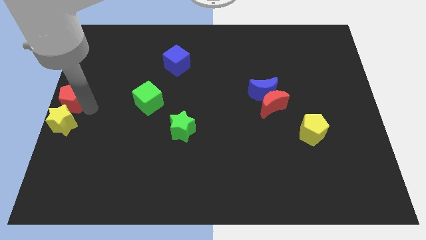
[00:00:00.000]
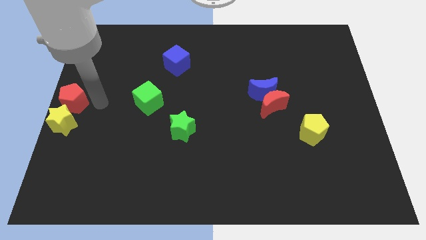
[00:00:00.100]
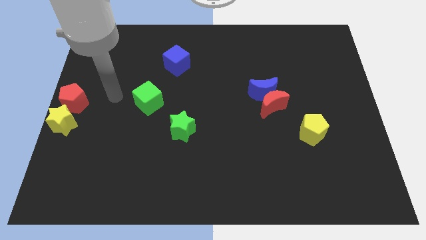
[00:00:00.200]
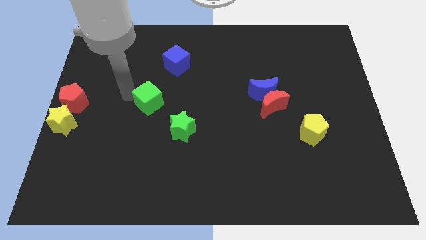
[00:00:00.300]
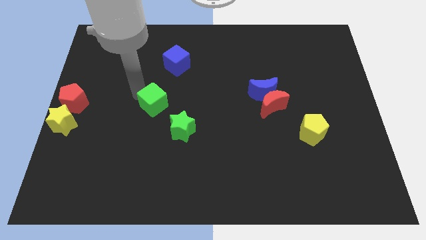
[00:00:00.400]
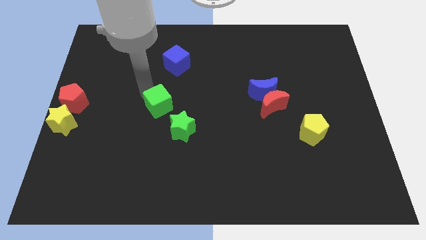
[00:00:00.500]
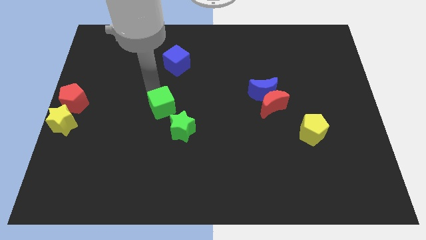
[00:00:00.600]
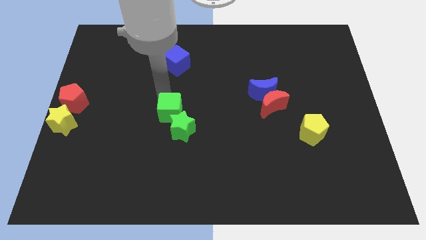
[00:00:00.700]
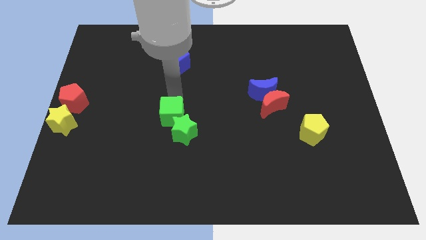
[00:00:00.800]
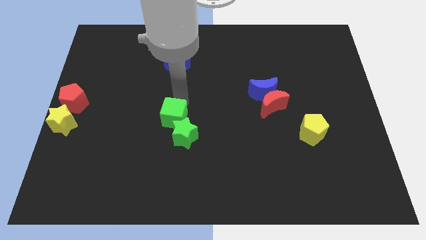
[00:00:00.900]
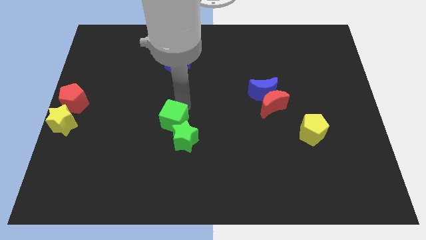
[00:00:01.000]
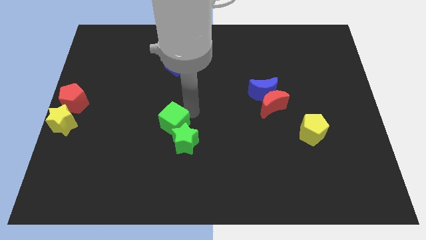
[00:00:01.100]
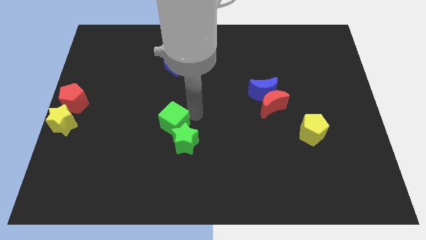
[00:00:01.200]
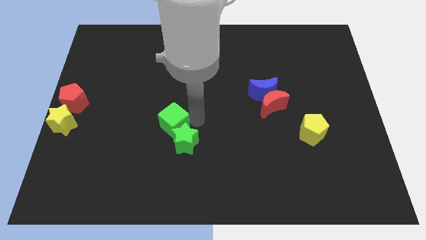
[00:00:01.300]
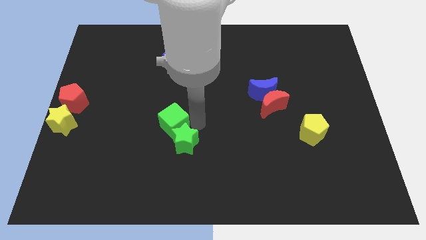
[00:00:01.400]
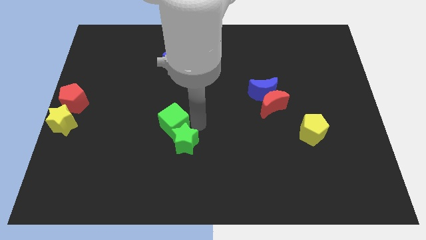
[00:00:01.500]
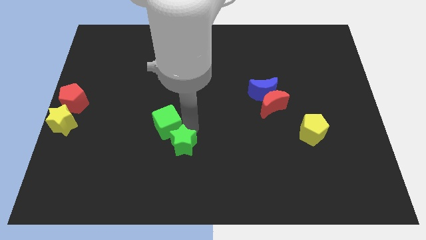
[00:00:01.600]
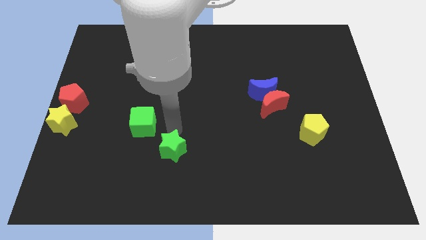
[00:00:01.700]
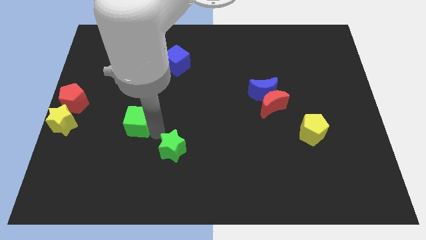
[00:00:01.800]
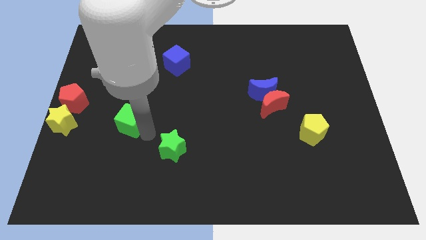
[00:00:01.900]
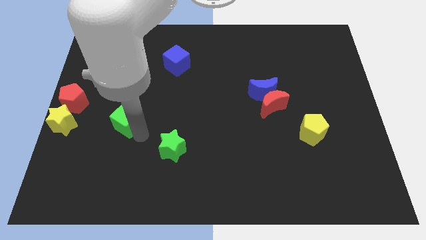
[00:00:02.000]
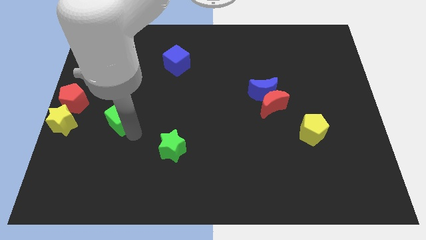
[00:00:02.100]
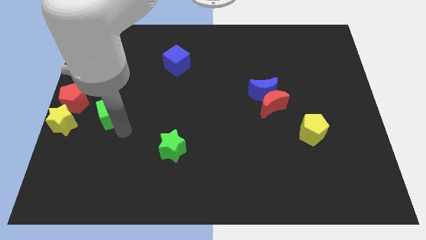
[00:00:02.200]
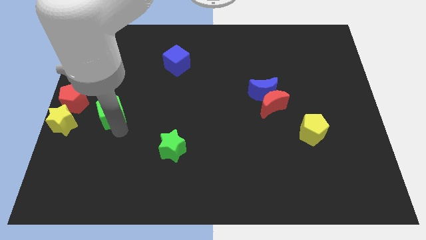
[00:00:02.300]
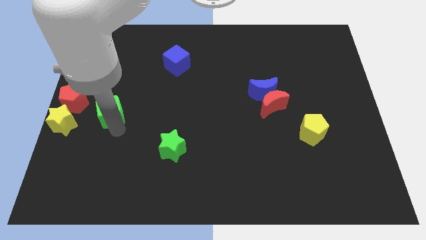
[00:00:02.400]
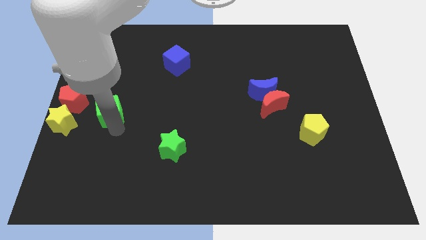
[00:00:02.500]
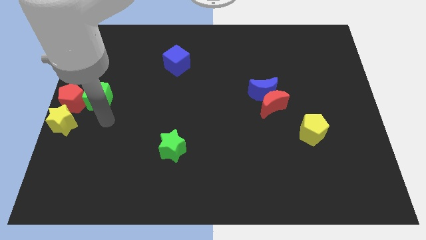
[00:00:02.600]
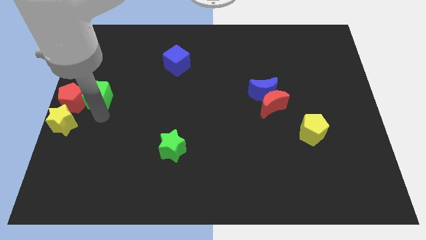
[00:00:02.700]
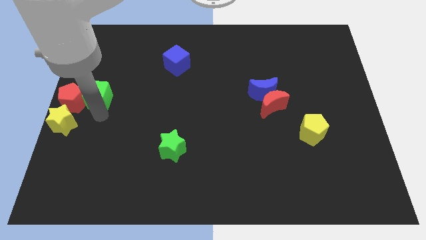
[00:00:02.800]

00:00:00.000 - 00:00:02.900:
place the green cube to the right of red pentagon

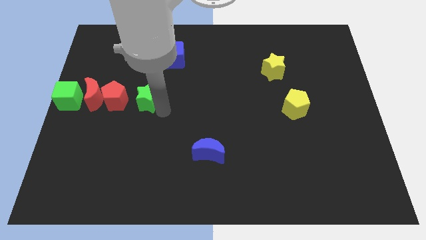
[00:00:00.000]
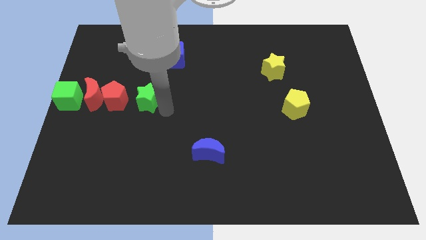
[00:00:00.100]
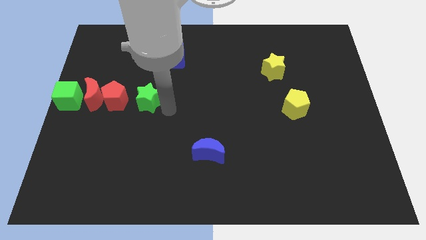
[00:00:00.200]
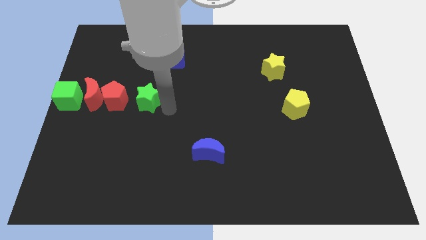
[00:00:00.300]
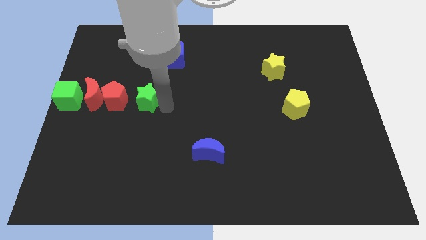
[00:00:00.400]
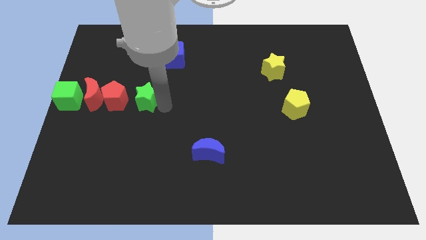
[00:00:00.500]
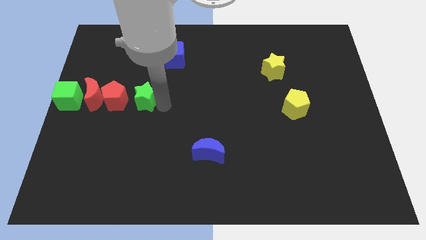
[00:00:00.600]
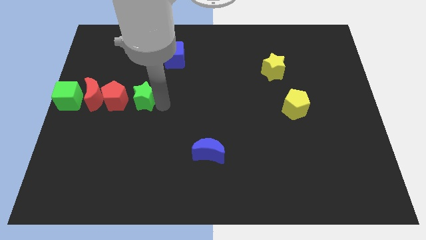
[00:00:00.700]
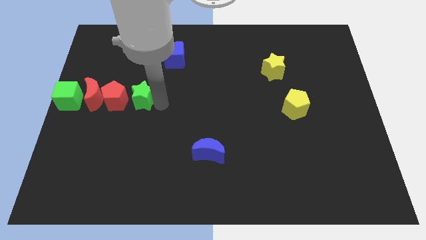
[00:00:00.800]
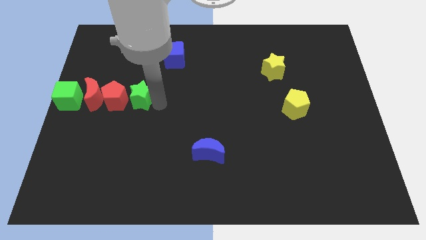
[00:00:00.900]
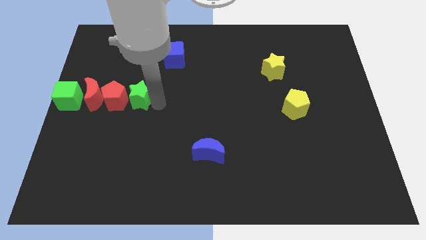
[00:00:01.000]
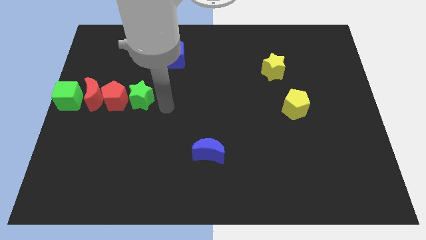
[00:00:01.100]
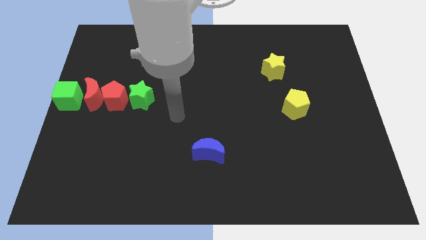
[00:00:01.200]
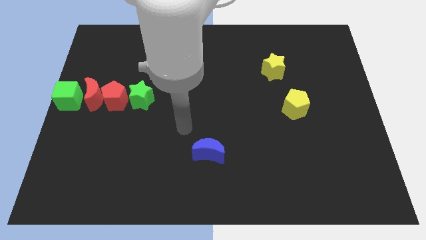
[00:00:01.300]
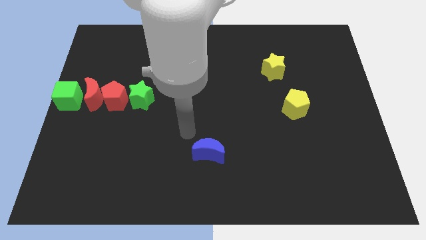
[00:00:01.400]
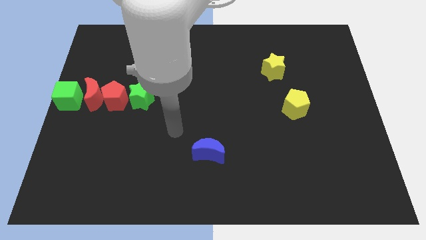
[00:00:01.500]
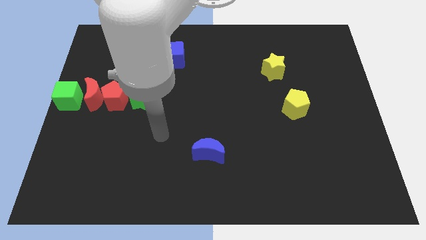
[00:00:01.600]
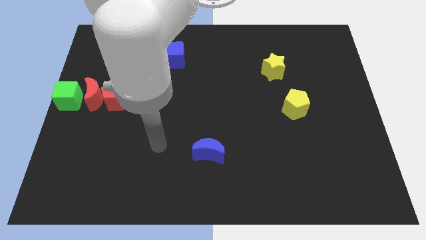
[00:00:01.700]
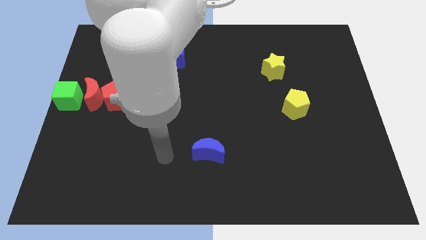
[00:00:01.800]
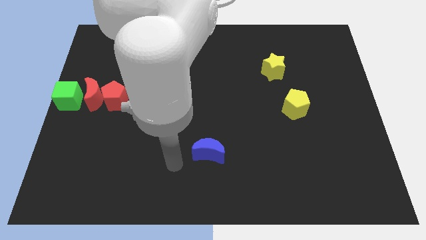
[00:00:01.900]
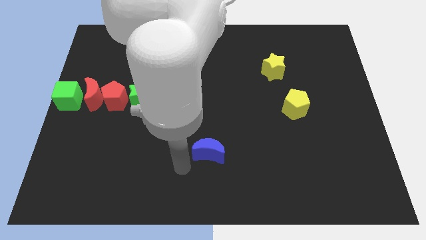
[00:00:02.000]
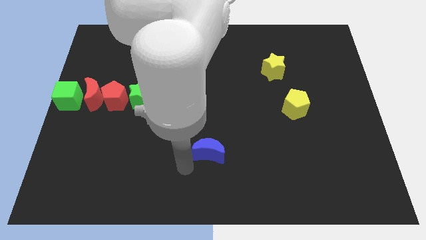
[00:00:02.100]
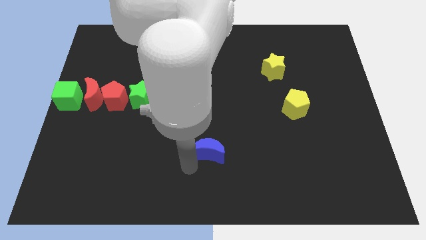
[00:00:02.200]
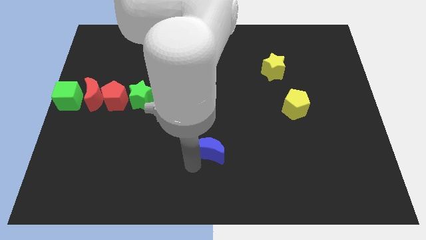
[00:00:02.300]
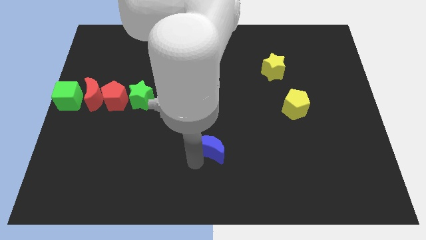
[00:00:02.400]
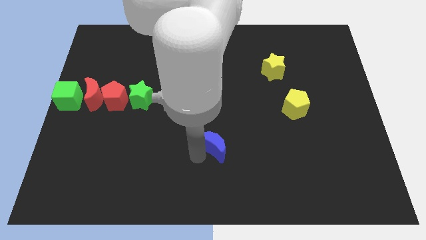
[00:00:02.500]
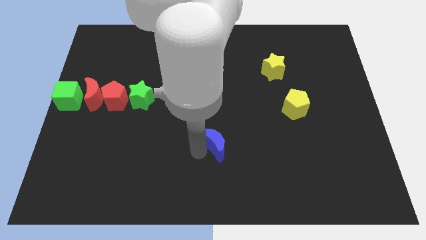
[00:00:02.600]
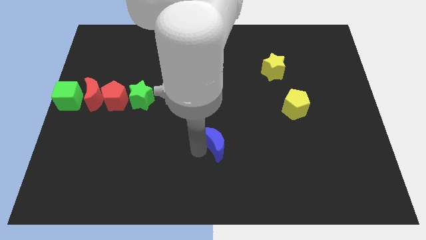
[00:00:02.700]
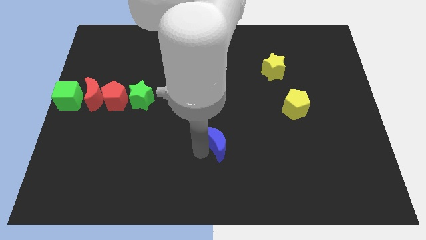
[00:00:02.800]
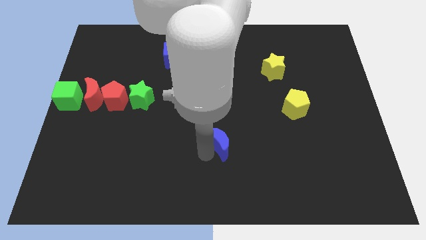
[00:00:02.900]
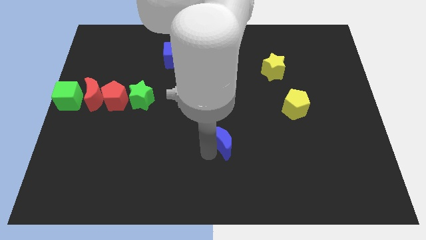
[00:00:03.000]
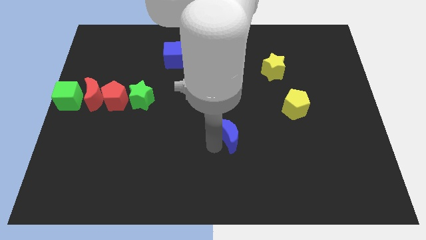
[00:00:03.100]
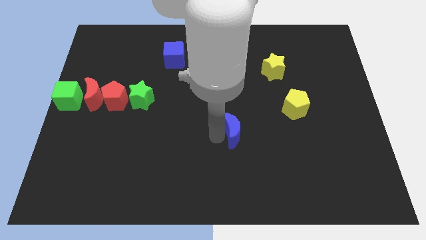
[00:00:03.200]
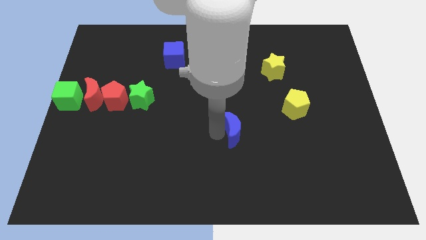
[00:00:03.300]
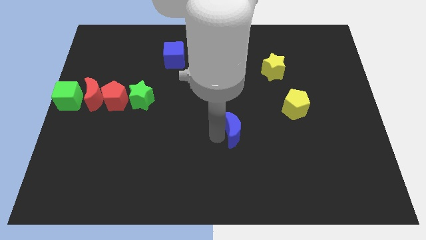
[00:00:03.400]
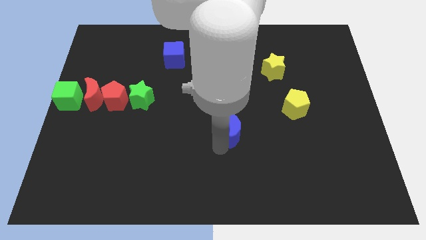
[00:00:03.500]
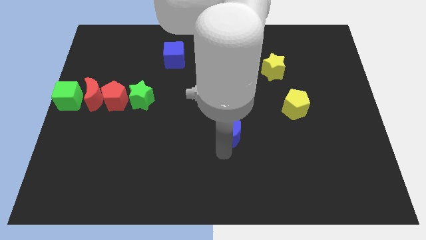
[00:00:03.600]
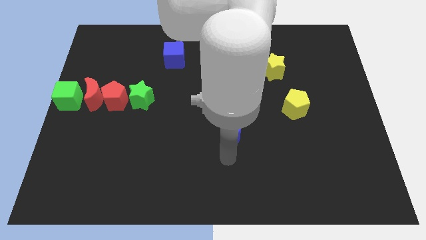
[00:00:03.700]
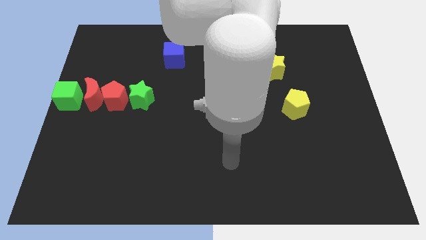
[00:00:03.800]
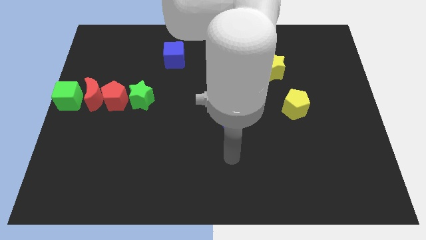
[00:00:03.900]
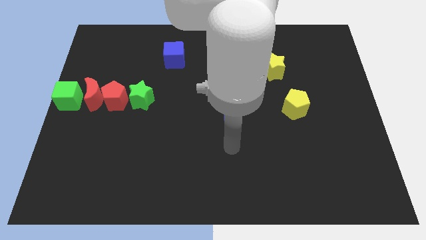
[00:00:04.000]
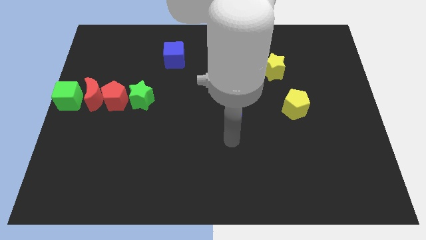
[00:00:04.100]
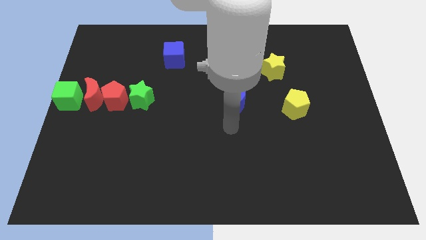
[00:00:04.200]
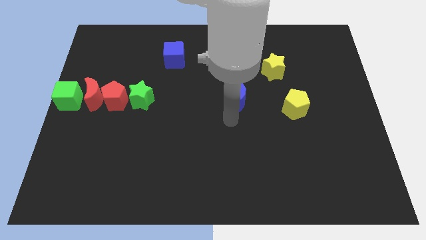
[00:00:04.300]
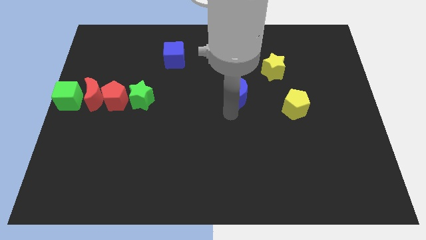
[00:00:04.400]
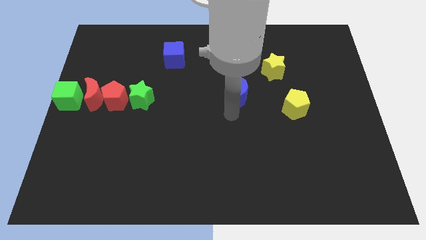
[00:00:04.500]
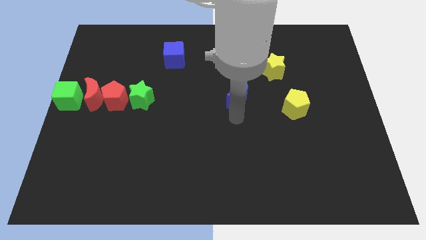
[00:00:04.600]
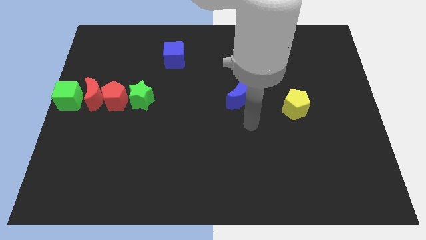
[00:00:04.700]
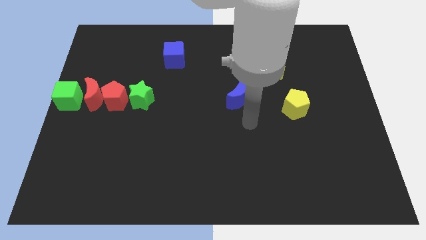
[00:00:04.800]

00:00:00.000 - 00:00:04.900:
move the blue crescent slightly up

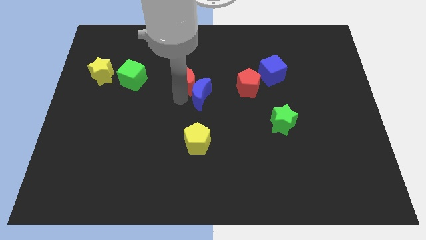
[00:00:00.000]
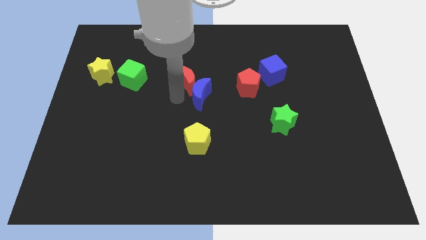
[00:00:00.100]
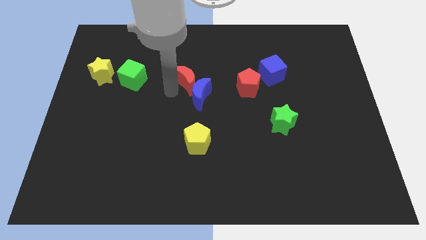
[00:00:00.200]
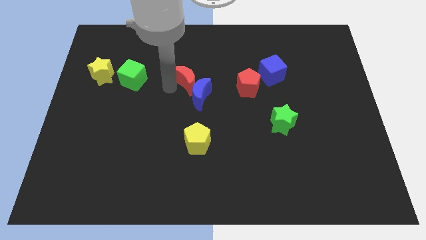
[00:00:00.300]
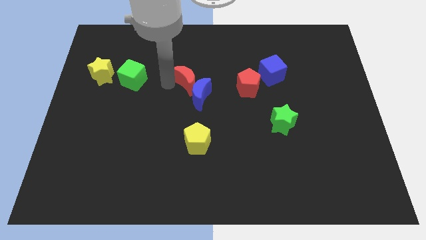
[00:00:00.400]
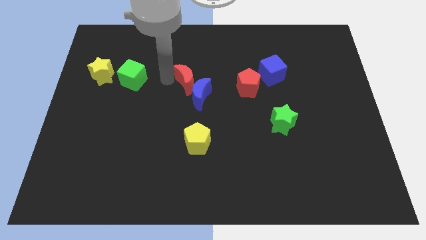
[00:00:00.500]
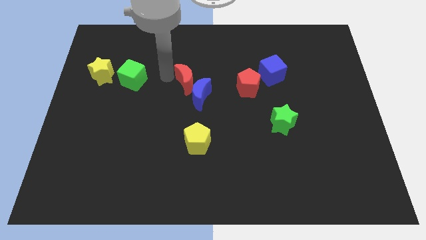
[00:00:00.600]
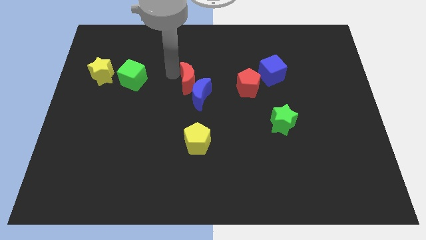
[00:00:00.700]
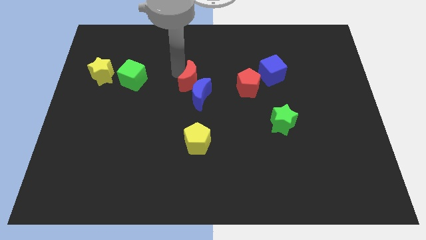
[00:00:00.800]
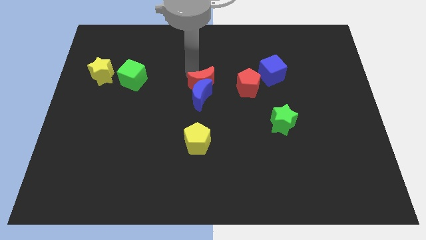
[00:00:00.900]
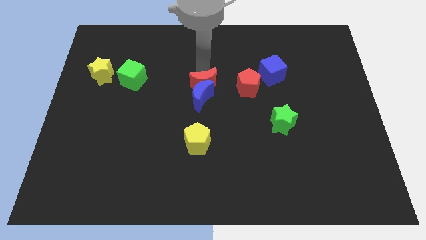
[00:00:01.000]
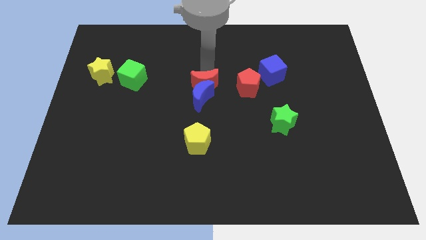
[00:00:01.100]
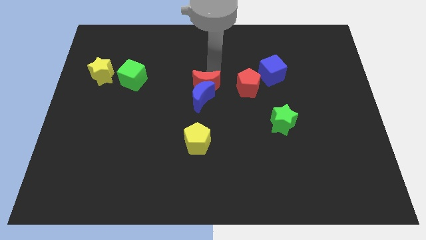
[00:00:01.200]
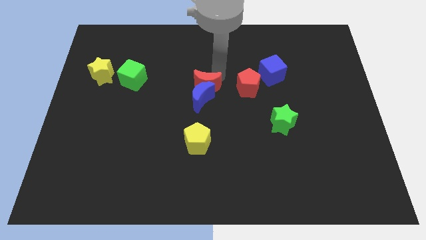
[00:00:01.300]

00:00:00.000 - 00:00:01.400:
move the red crescent to the top of the blue crescent
